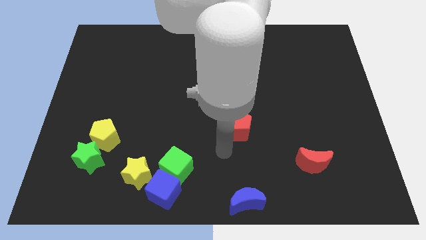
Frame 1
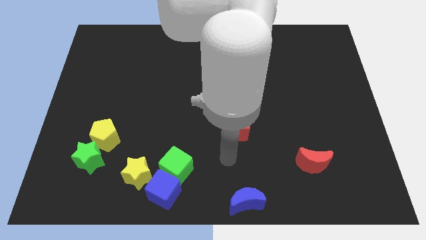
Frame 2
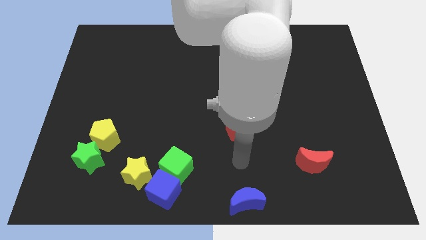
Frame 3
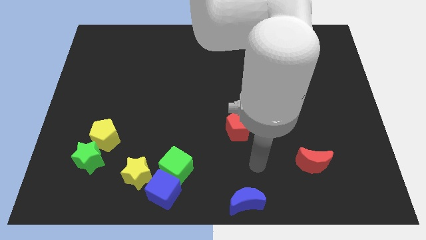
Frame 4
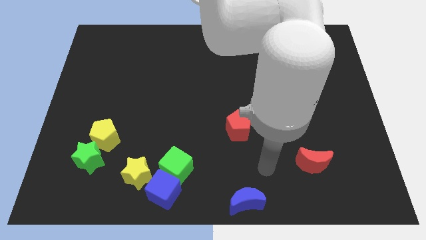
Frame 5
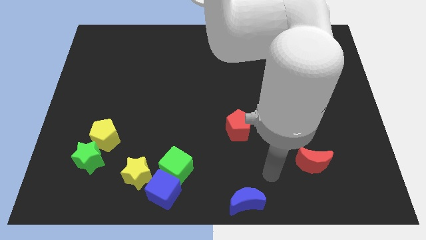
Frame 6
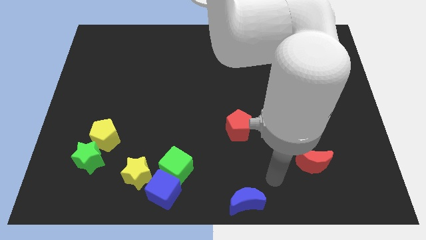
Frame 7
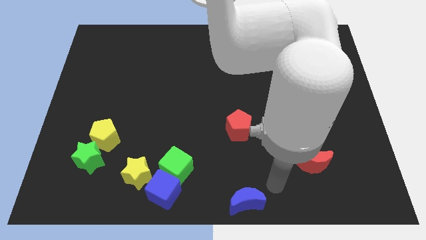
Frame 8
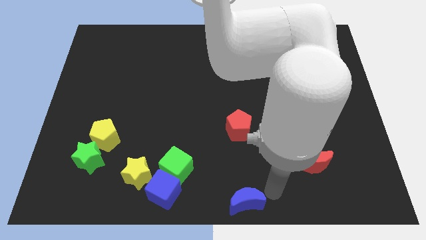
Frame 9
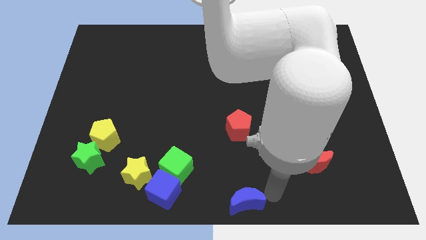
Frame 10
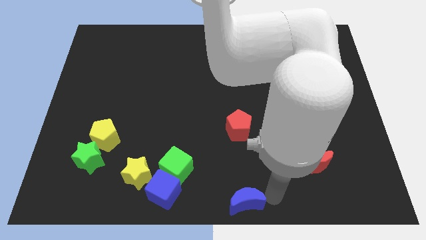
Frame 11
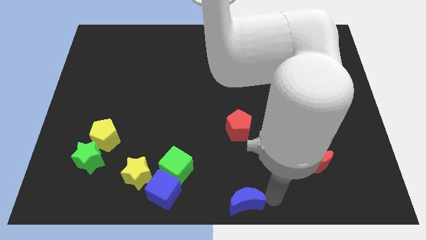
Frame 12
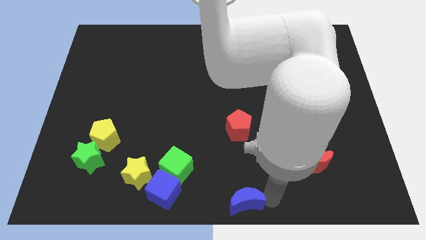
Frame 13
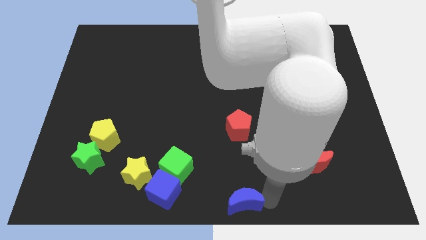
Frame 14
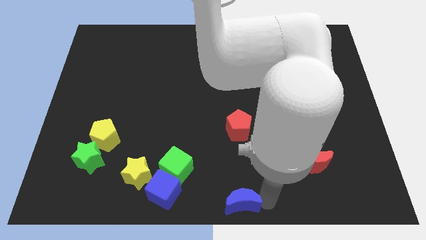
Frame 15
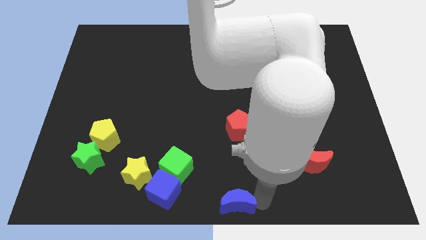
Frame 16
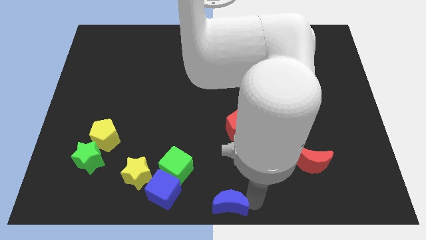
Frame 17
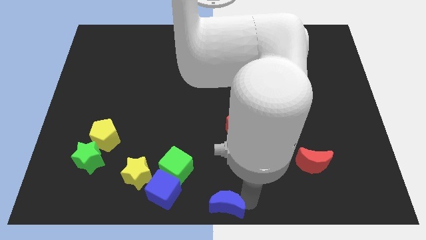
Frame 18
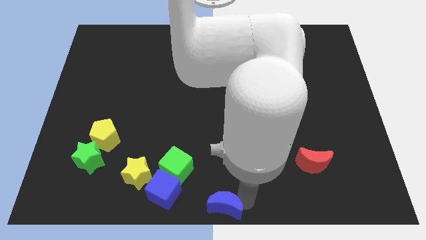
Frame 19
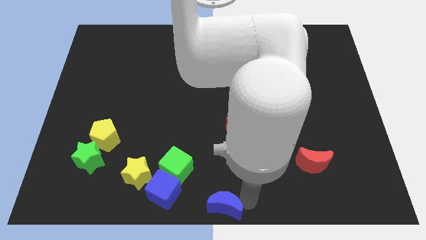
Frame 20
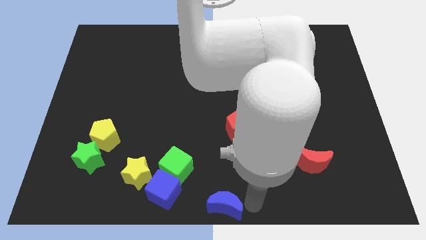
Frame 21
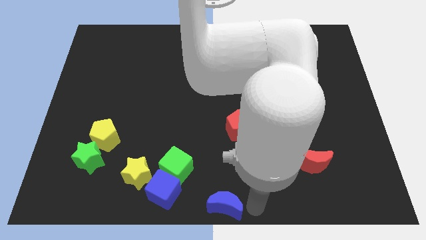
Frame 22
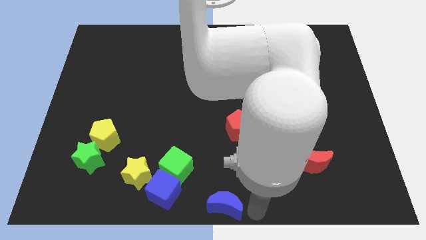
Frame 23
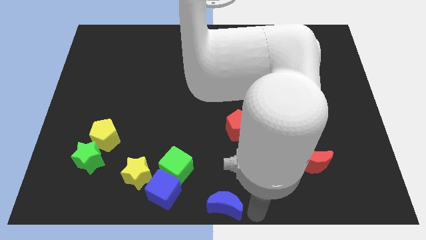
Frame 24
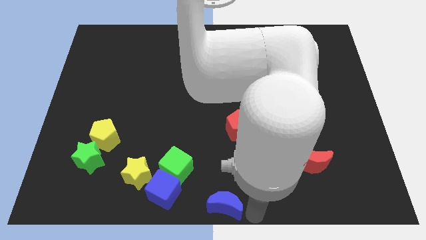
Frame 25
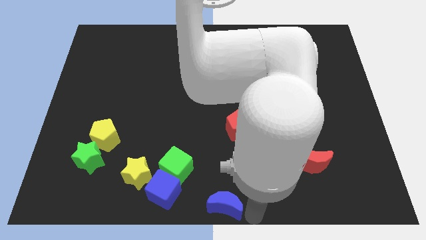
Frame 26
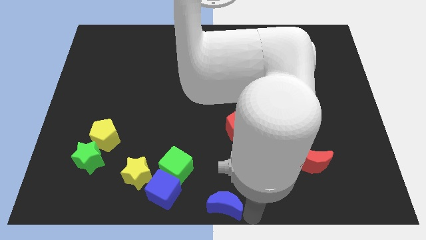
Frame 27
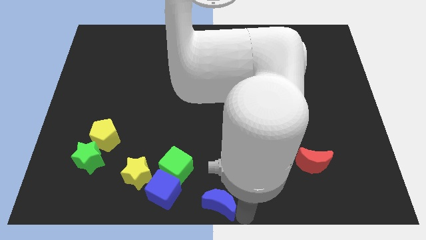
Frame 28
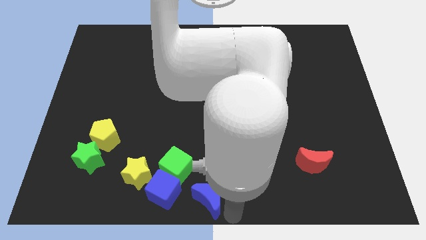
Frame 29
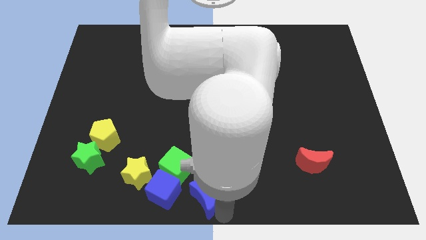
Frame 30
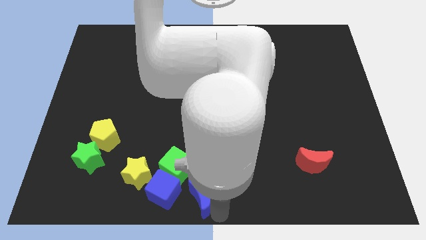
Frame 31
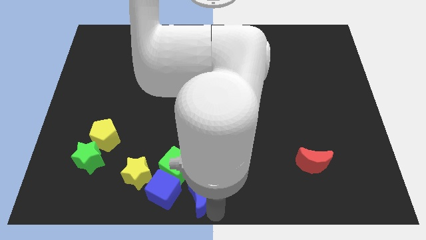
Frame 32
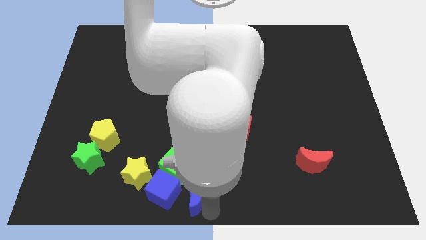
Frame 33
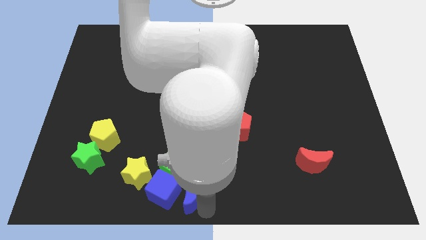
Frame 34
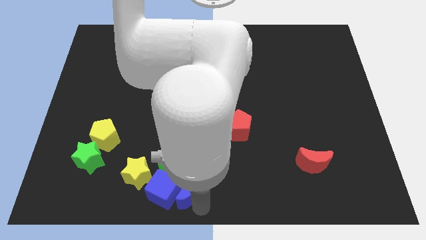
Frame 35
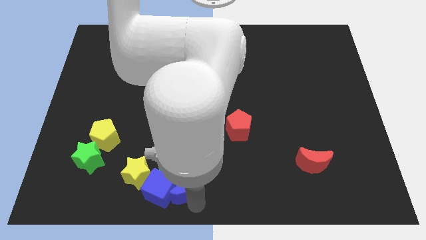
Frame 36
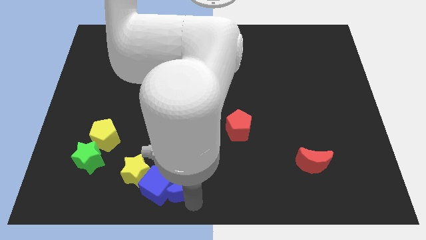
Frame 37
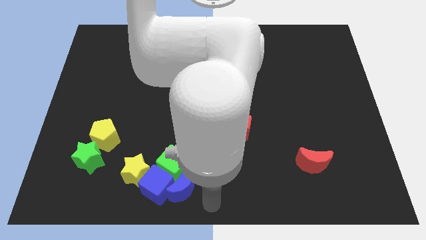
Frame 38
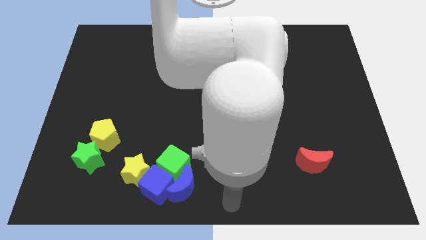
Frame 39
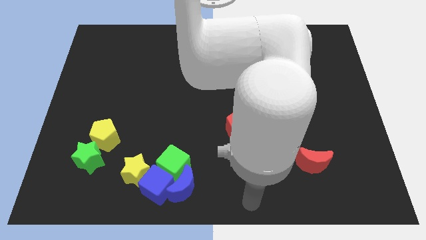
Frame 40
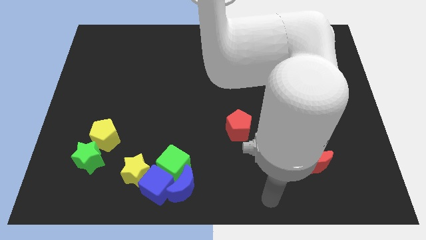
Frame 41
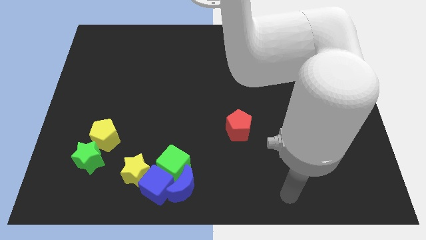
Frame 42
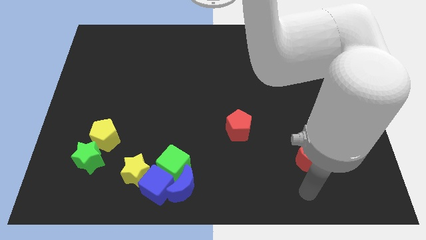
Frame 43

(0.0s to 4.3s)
push the blue moon into blue cube

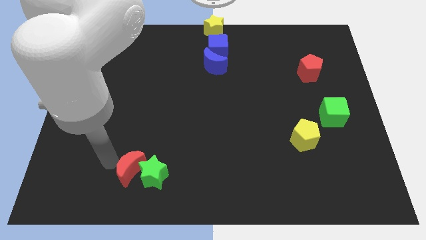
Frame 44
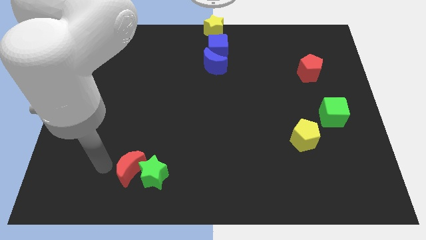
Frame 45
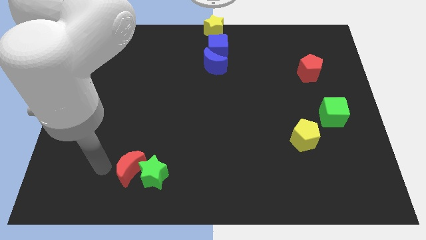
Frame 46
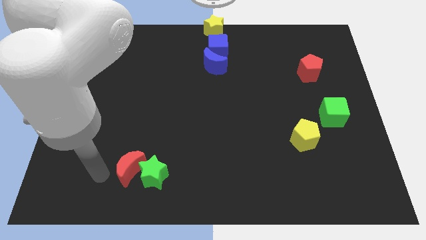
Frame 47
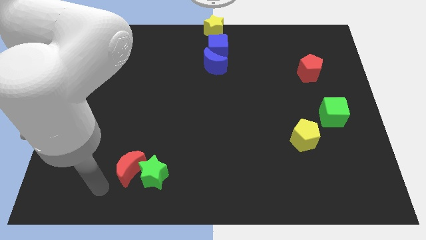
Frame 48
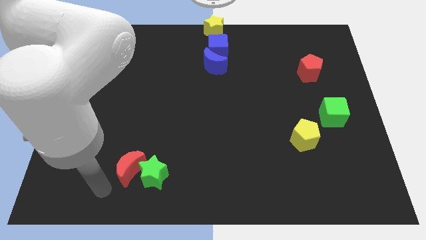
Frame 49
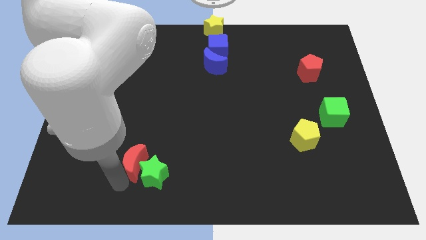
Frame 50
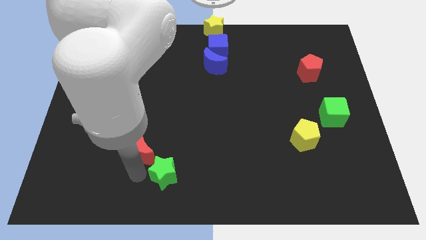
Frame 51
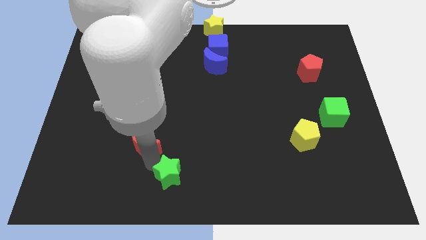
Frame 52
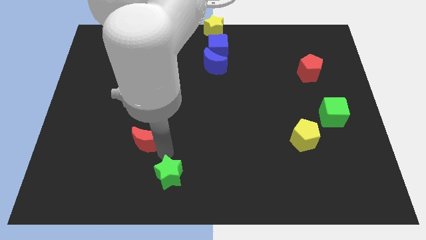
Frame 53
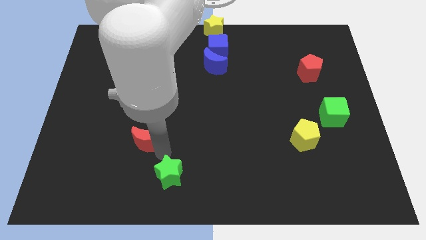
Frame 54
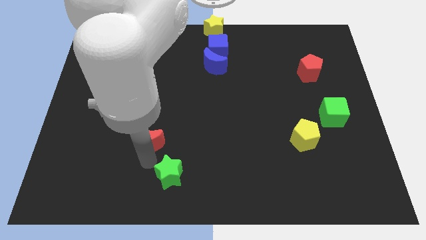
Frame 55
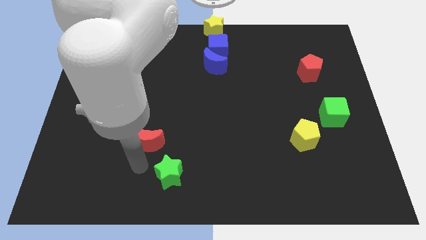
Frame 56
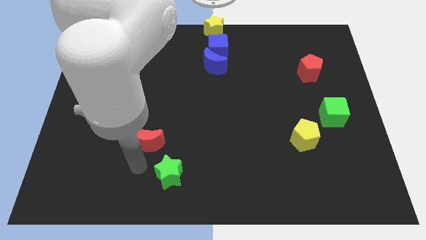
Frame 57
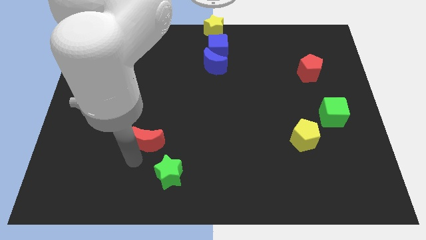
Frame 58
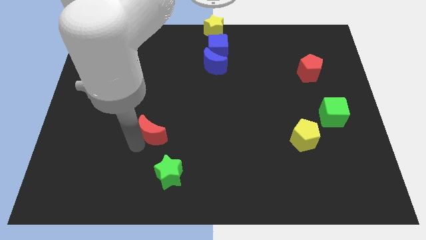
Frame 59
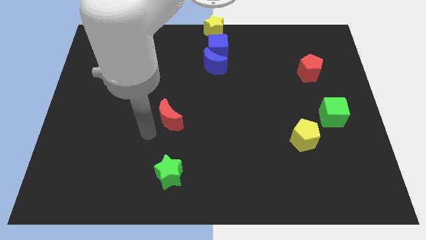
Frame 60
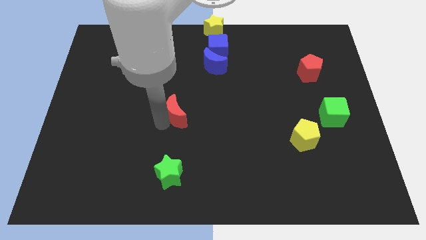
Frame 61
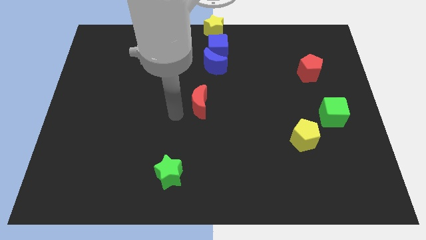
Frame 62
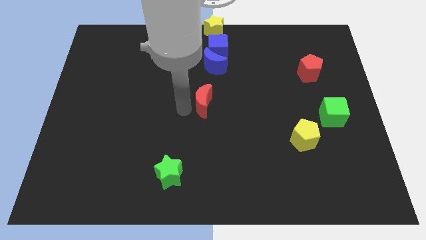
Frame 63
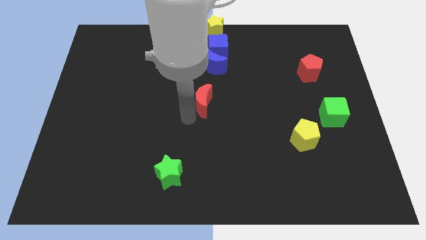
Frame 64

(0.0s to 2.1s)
separate the red moon from the green star

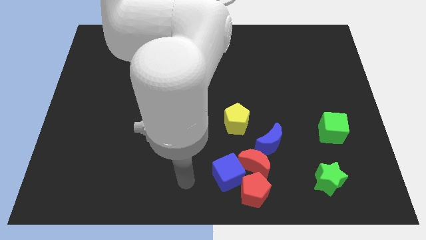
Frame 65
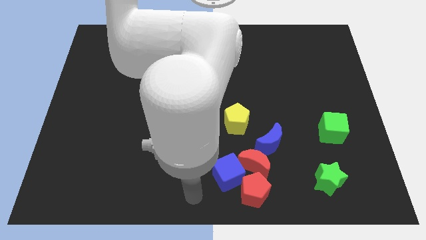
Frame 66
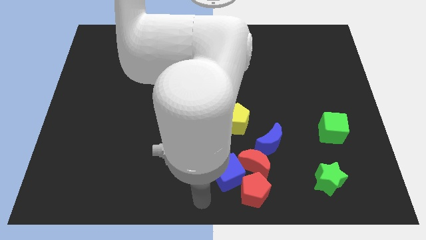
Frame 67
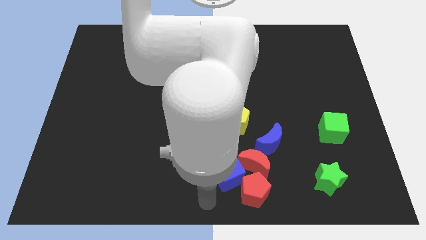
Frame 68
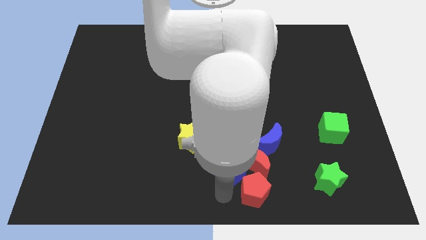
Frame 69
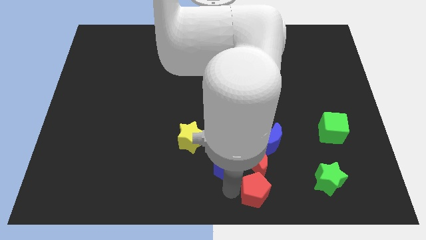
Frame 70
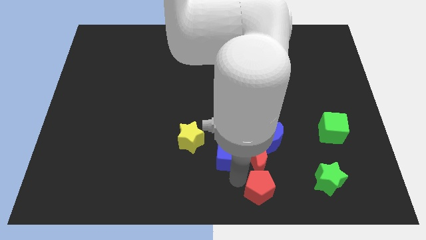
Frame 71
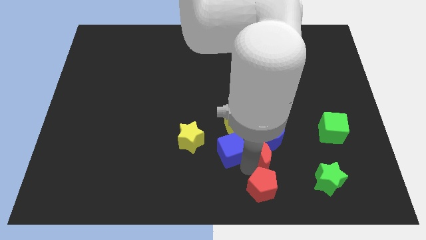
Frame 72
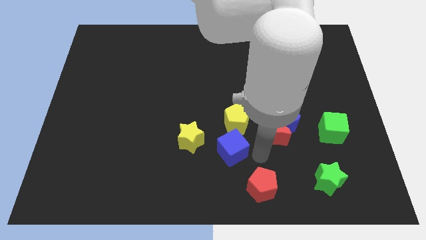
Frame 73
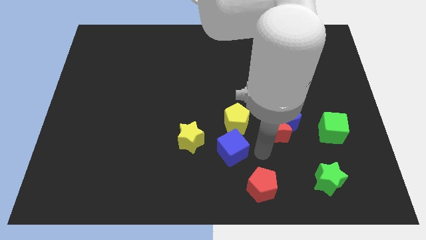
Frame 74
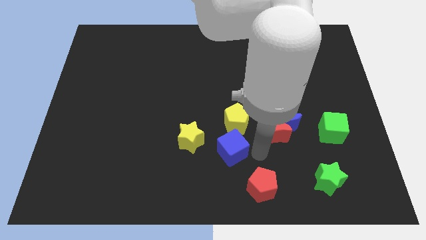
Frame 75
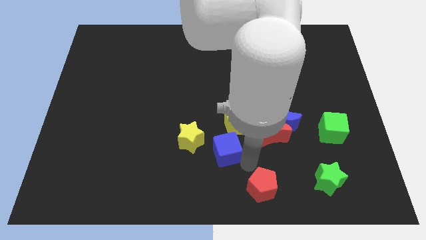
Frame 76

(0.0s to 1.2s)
place the blue cube below the yellow pentagon

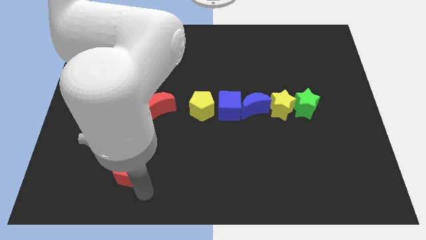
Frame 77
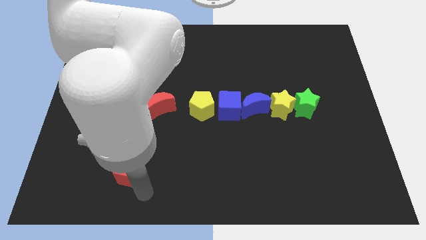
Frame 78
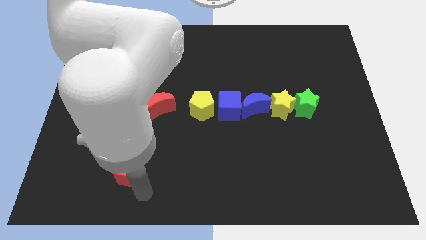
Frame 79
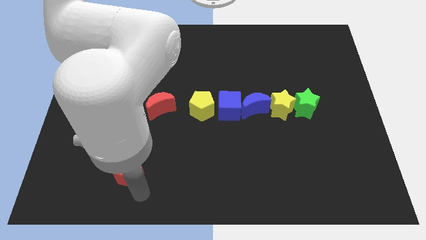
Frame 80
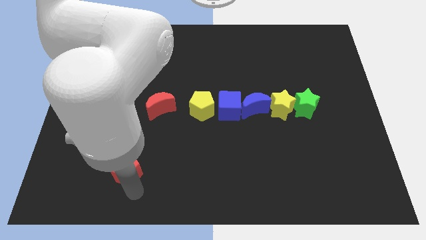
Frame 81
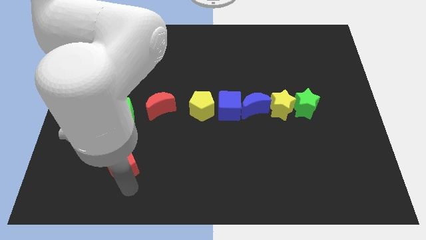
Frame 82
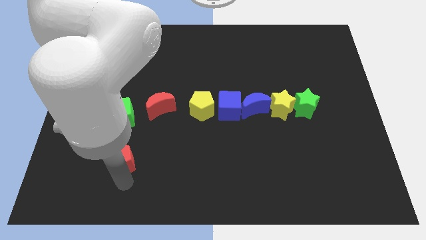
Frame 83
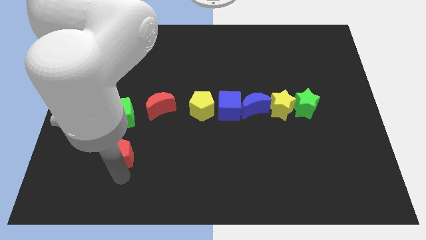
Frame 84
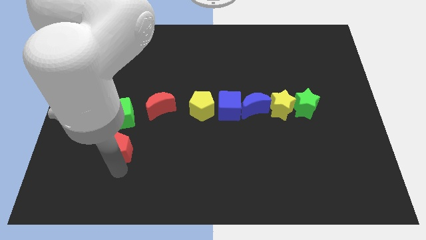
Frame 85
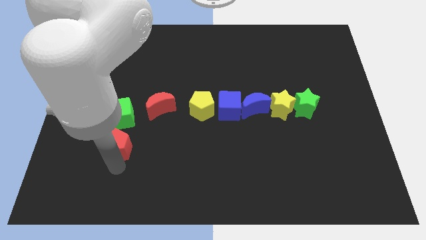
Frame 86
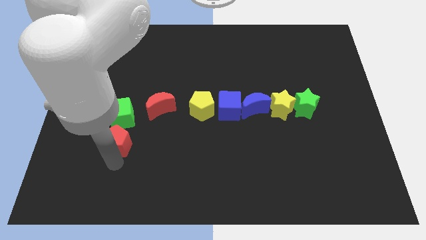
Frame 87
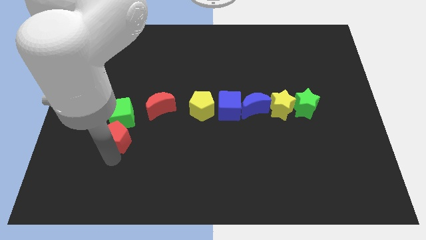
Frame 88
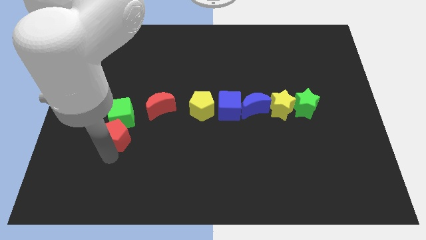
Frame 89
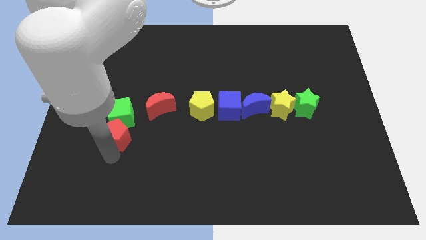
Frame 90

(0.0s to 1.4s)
drag the red pentagon and place it below the green cube
